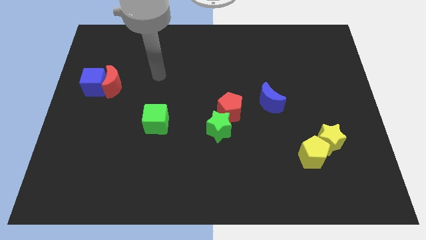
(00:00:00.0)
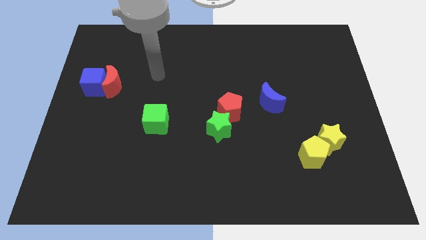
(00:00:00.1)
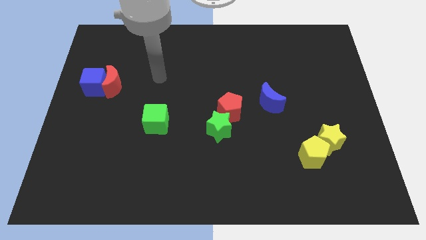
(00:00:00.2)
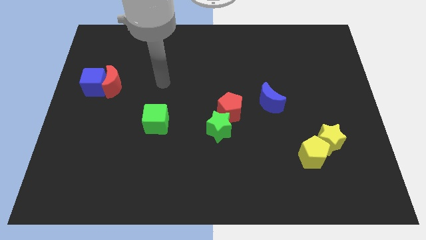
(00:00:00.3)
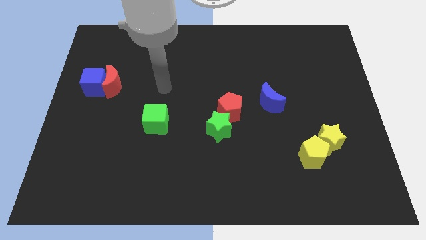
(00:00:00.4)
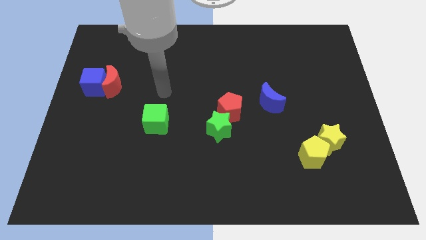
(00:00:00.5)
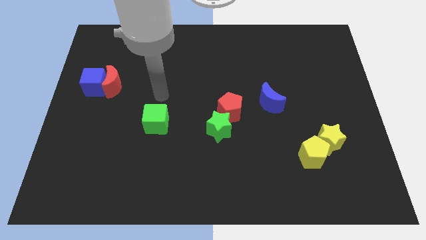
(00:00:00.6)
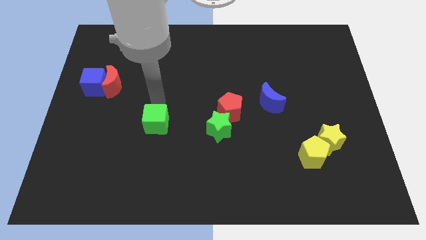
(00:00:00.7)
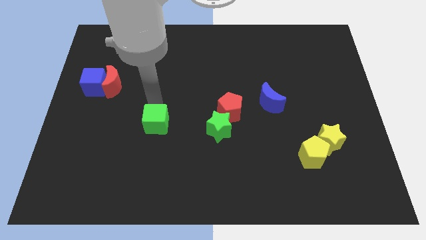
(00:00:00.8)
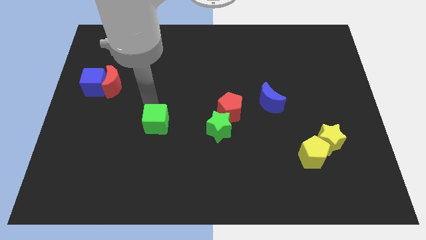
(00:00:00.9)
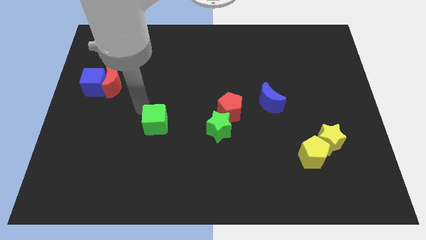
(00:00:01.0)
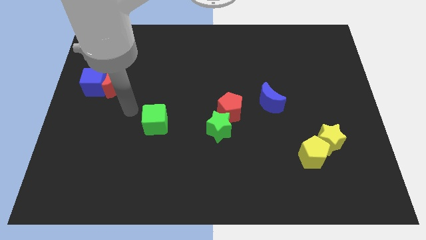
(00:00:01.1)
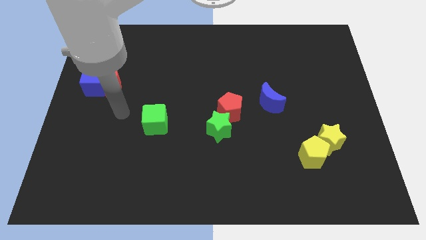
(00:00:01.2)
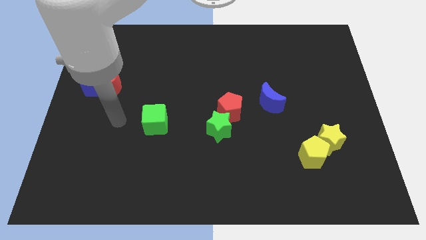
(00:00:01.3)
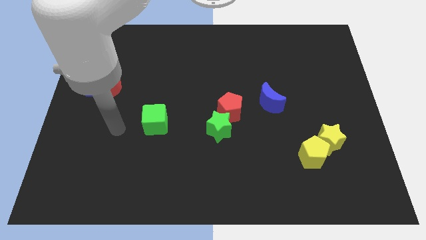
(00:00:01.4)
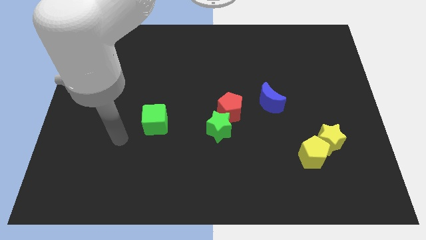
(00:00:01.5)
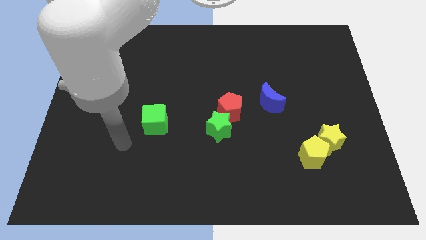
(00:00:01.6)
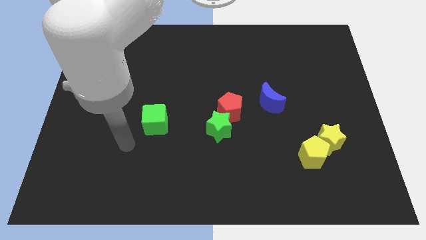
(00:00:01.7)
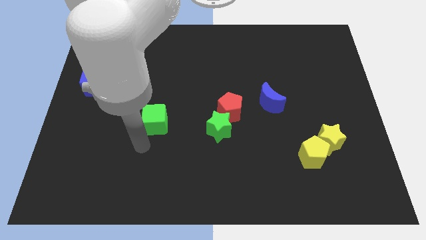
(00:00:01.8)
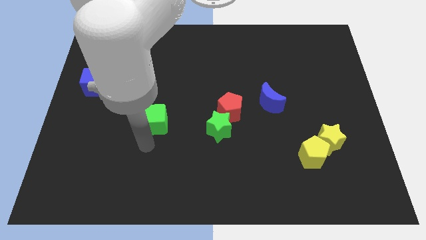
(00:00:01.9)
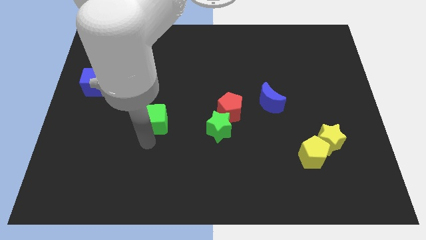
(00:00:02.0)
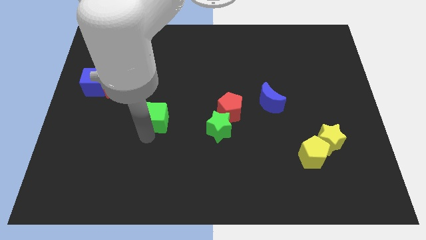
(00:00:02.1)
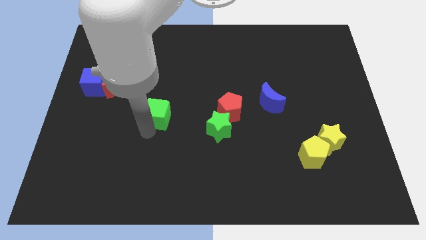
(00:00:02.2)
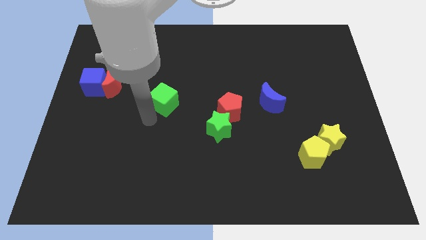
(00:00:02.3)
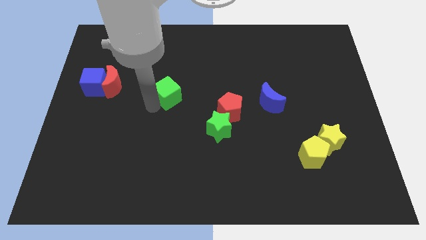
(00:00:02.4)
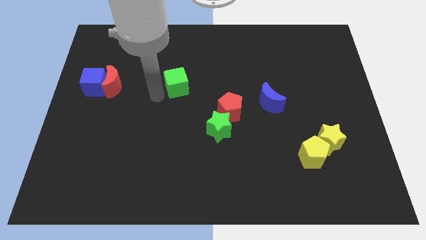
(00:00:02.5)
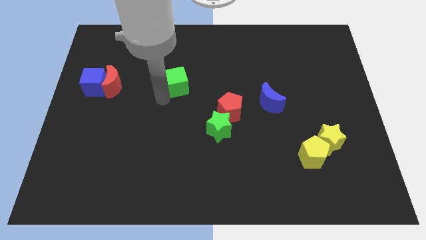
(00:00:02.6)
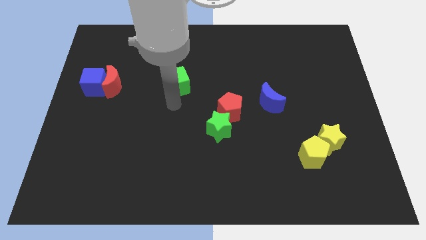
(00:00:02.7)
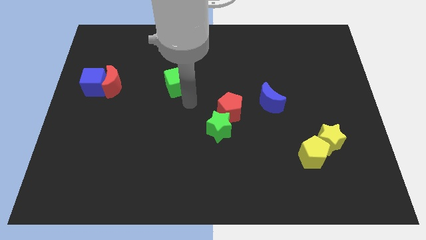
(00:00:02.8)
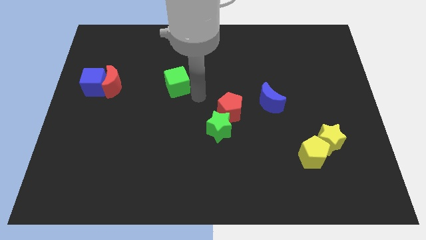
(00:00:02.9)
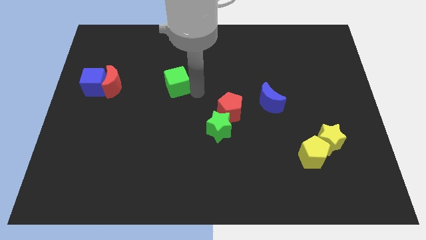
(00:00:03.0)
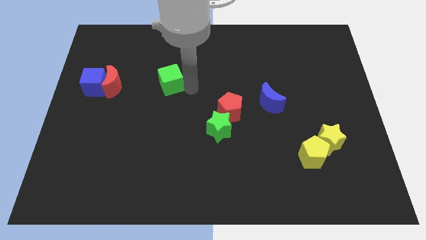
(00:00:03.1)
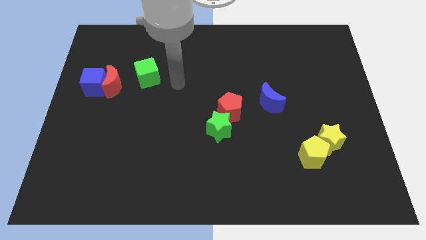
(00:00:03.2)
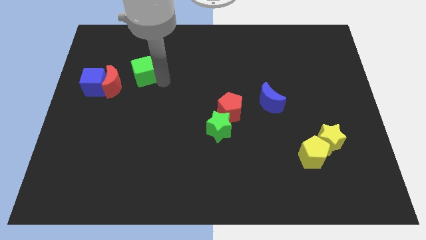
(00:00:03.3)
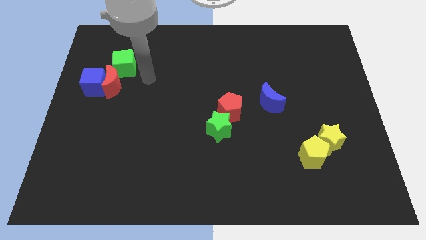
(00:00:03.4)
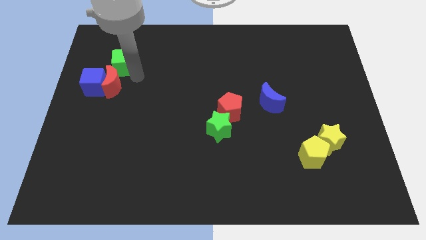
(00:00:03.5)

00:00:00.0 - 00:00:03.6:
place the green cube above the red crescent

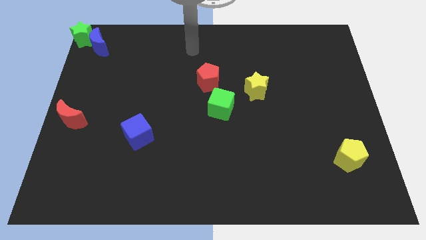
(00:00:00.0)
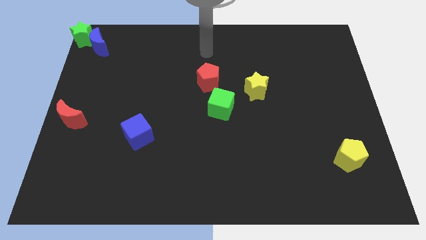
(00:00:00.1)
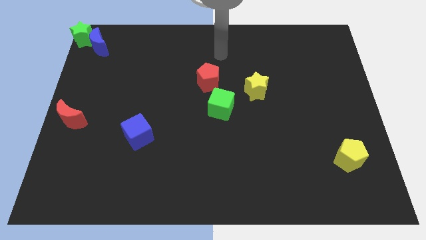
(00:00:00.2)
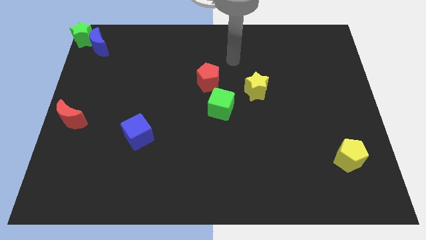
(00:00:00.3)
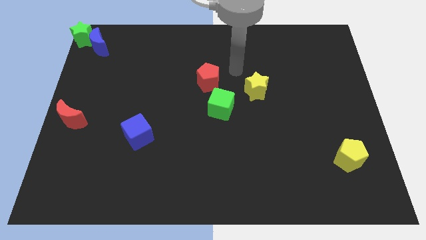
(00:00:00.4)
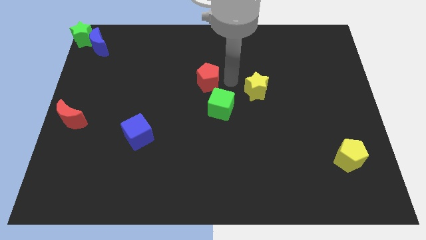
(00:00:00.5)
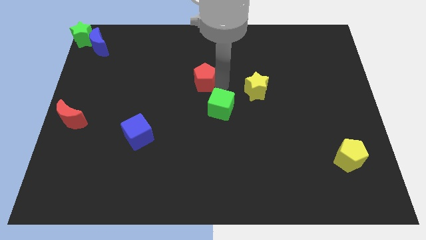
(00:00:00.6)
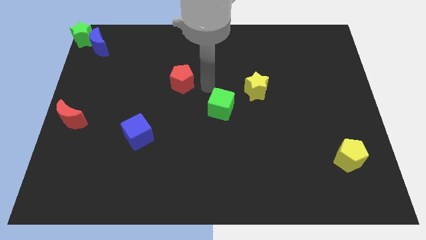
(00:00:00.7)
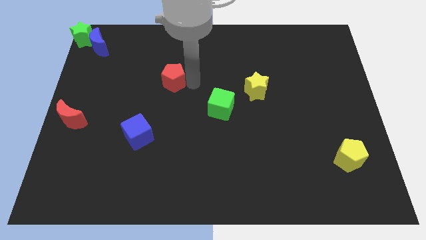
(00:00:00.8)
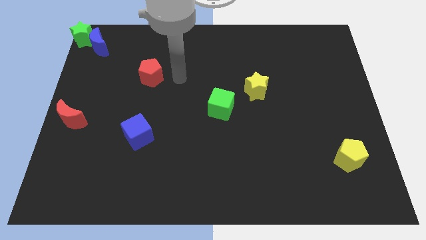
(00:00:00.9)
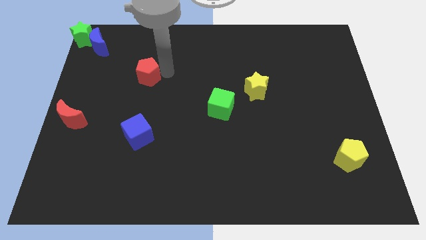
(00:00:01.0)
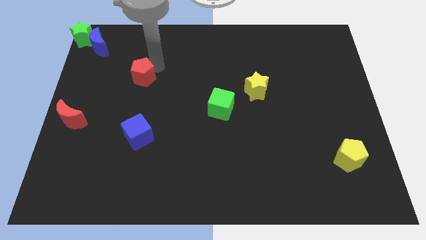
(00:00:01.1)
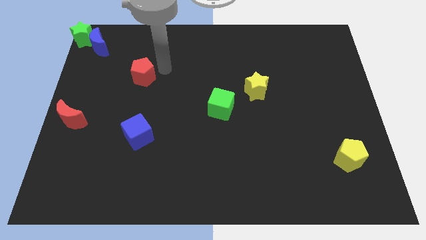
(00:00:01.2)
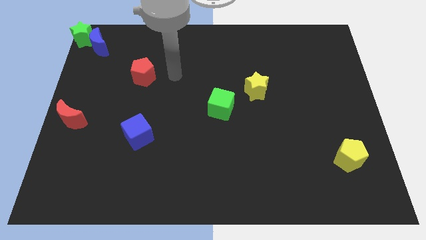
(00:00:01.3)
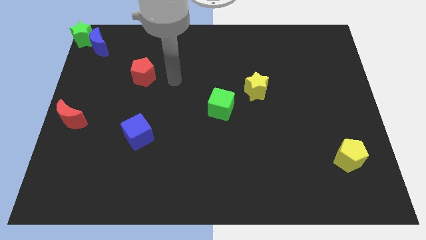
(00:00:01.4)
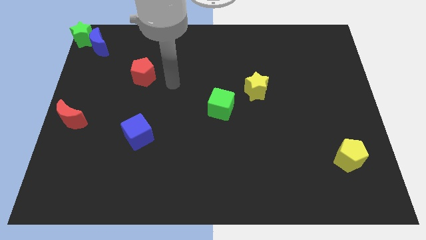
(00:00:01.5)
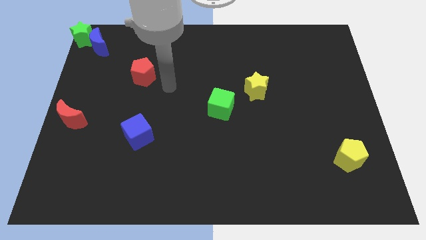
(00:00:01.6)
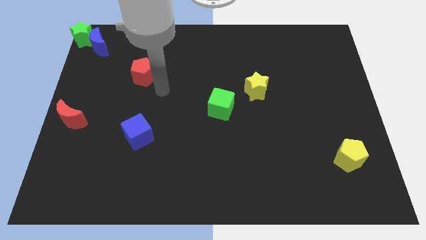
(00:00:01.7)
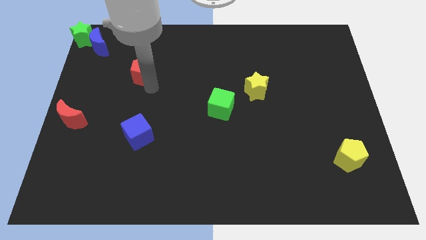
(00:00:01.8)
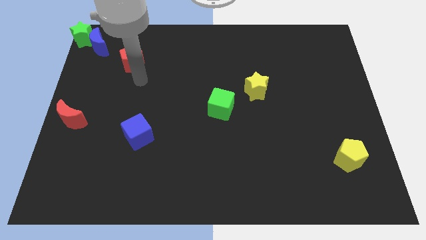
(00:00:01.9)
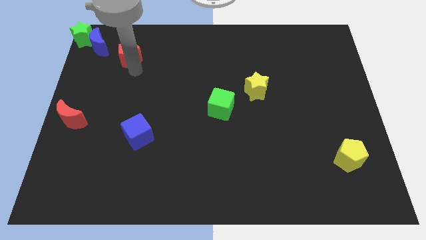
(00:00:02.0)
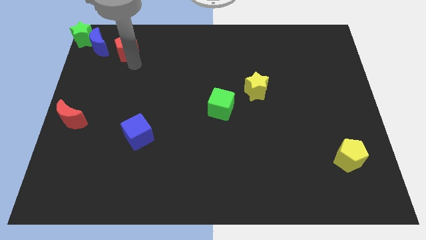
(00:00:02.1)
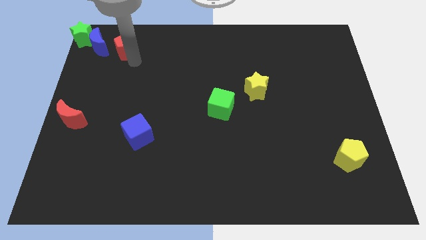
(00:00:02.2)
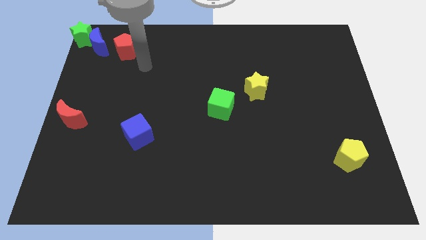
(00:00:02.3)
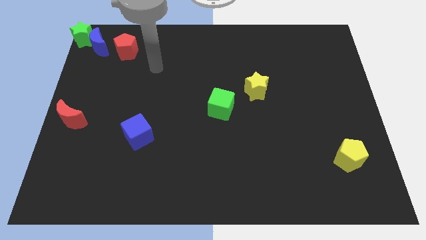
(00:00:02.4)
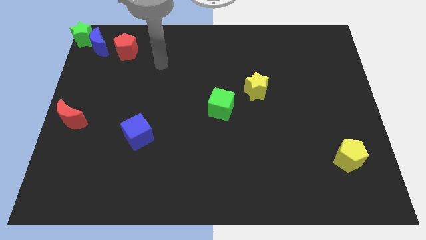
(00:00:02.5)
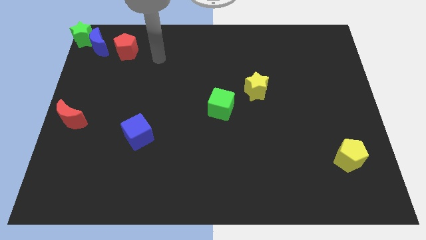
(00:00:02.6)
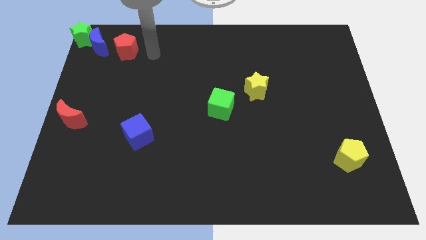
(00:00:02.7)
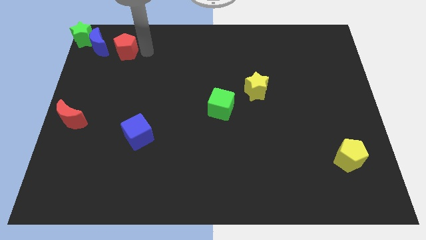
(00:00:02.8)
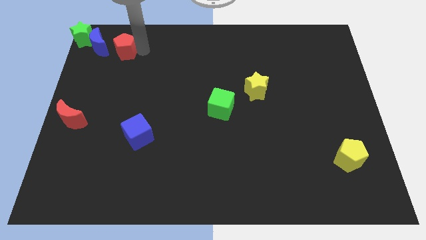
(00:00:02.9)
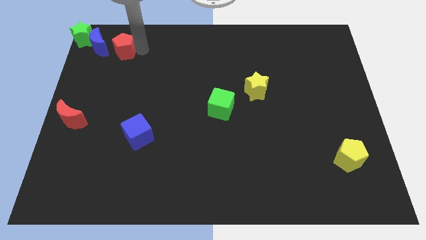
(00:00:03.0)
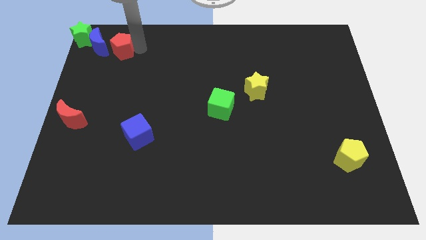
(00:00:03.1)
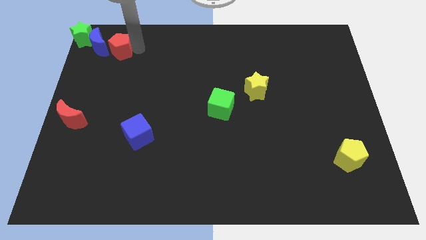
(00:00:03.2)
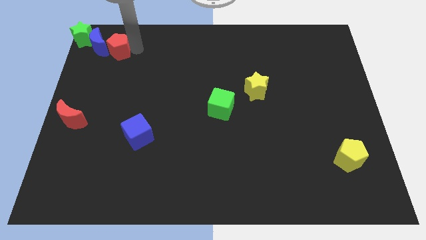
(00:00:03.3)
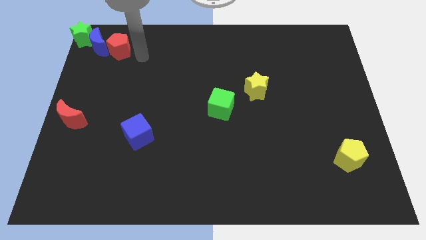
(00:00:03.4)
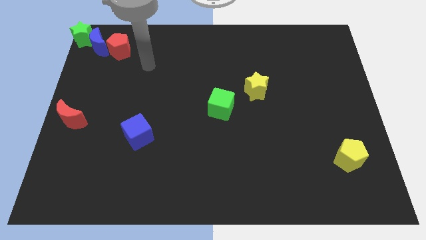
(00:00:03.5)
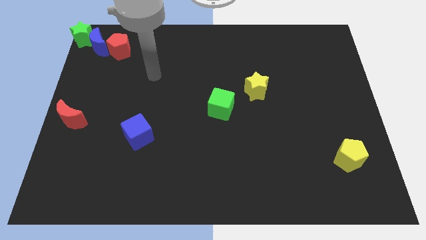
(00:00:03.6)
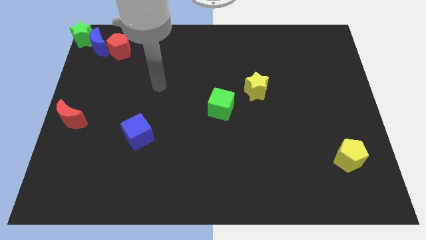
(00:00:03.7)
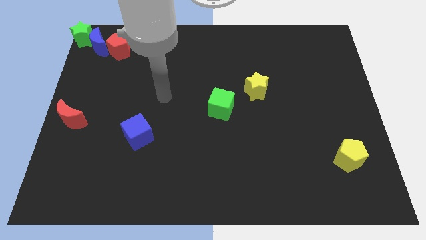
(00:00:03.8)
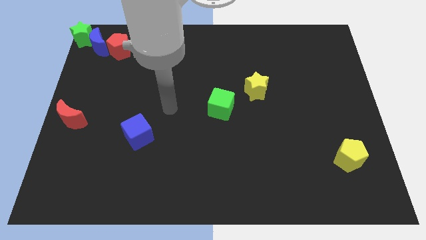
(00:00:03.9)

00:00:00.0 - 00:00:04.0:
move the red pentagon to the right of the blue crescent

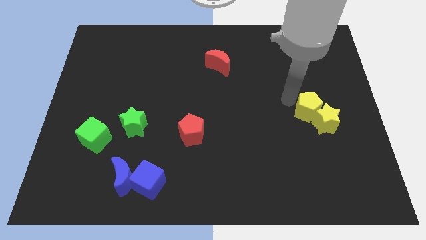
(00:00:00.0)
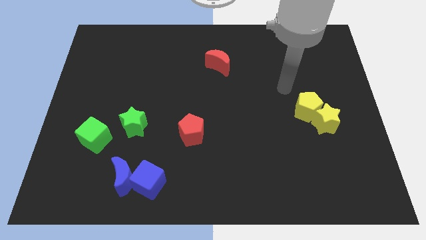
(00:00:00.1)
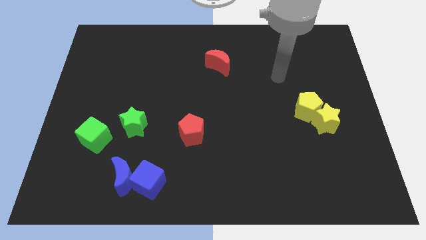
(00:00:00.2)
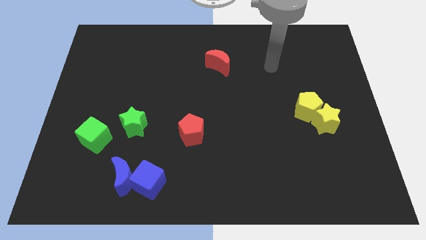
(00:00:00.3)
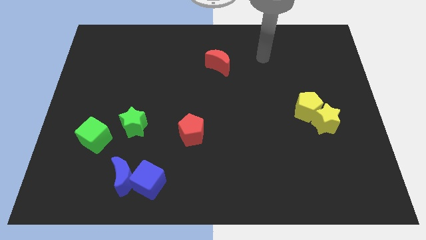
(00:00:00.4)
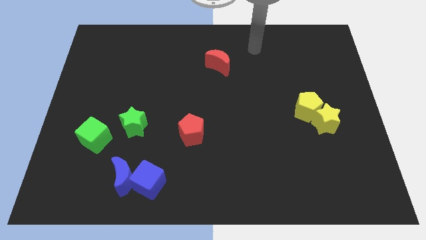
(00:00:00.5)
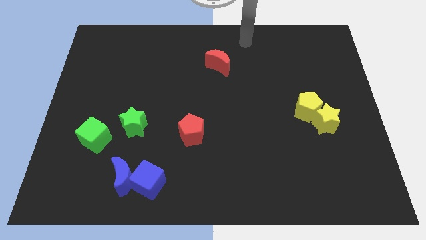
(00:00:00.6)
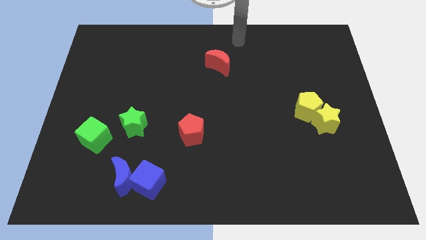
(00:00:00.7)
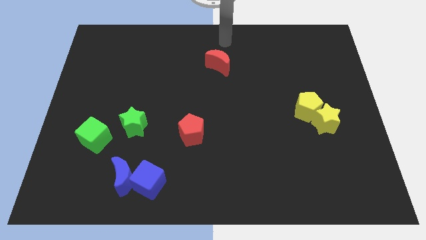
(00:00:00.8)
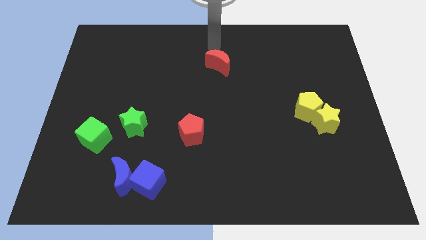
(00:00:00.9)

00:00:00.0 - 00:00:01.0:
place your arm above the red crescent

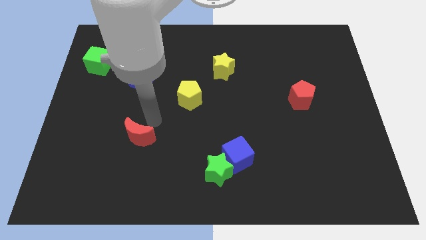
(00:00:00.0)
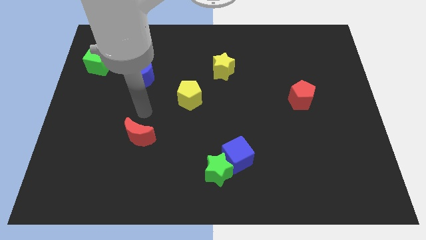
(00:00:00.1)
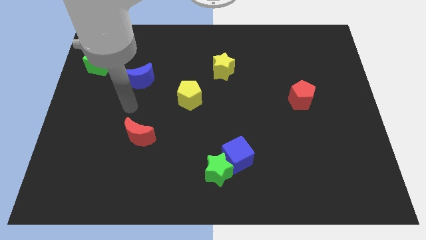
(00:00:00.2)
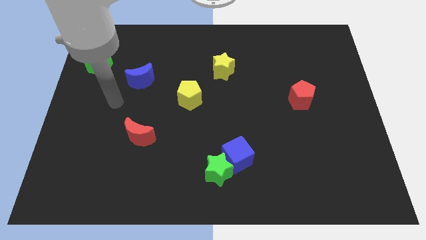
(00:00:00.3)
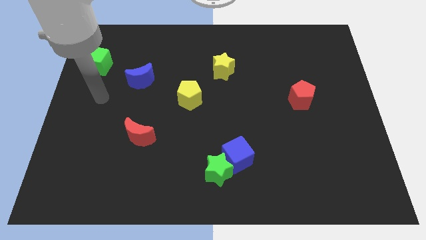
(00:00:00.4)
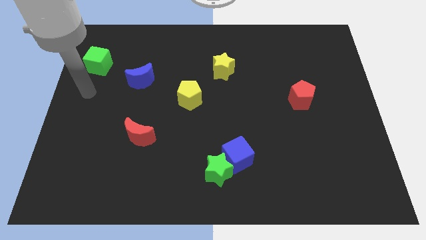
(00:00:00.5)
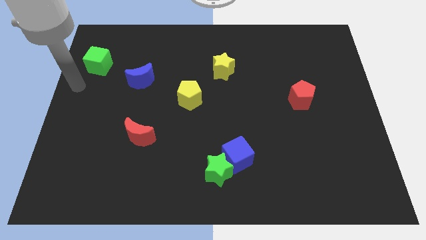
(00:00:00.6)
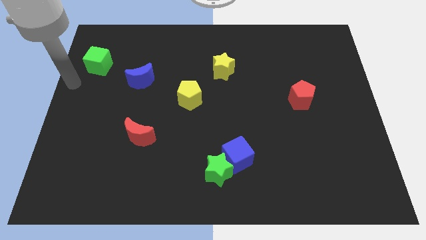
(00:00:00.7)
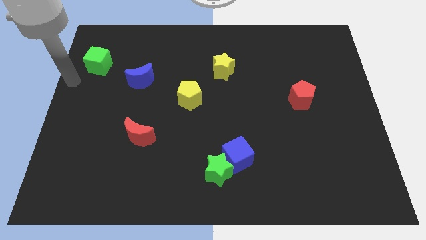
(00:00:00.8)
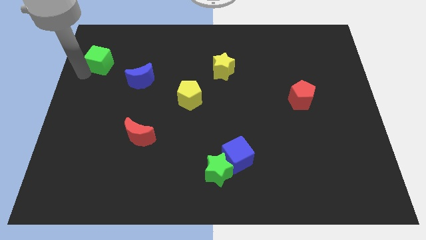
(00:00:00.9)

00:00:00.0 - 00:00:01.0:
move your arm away from the red moon
